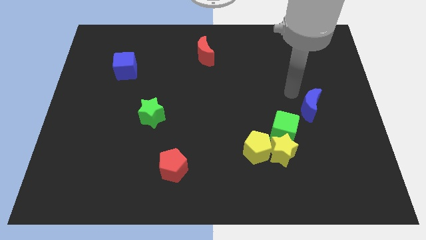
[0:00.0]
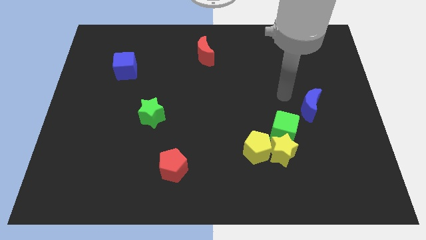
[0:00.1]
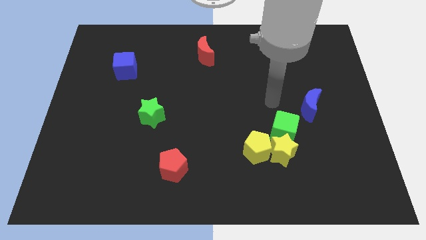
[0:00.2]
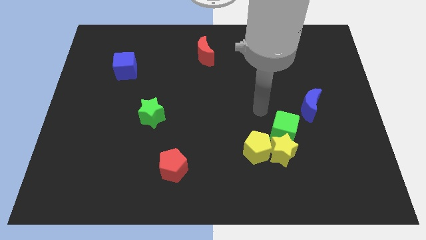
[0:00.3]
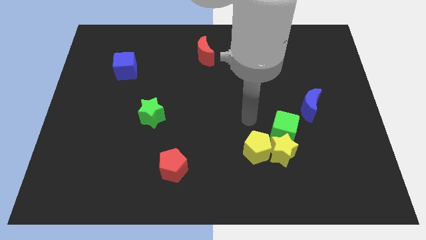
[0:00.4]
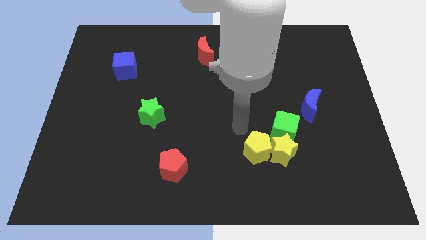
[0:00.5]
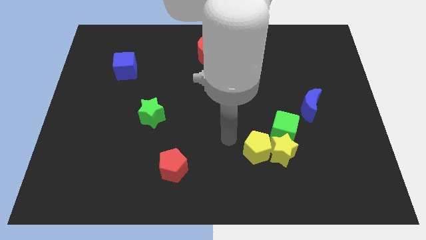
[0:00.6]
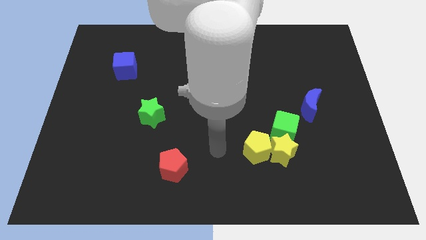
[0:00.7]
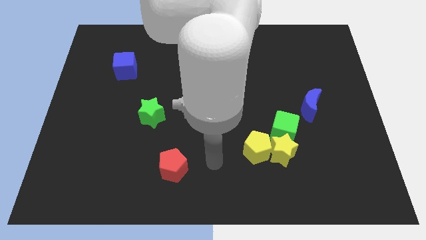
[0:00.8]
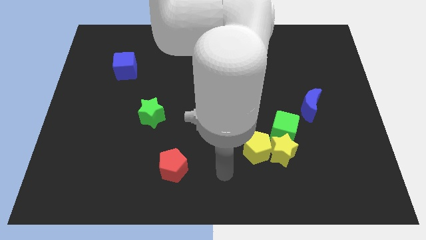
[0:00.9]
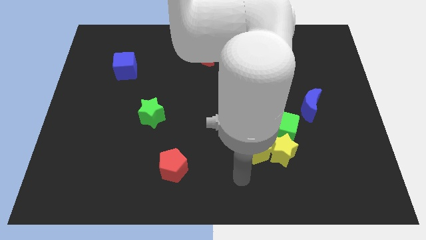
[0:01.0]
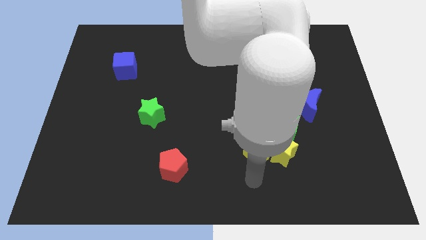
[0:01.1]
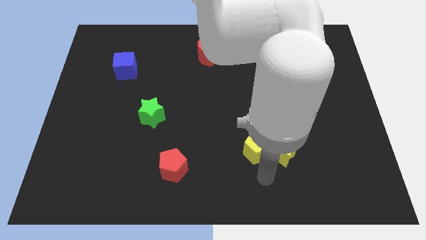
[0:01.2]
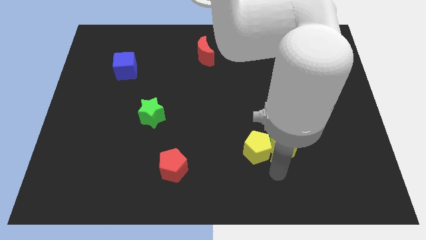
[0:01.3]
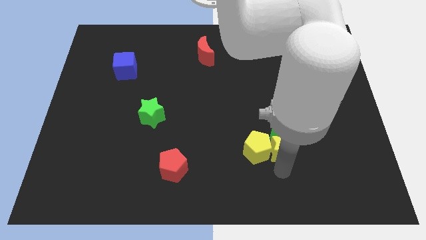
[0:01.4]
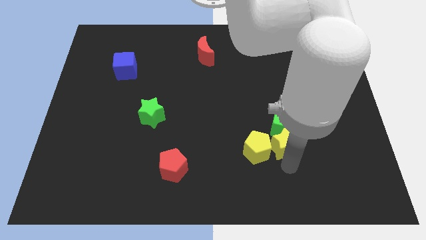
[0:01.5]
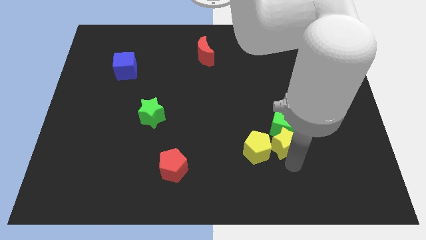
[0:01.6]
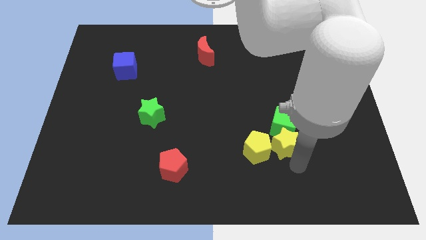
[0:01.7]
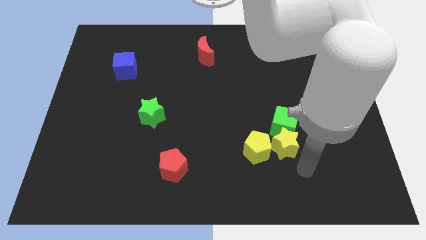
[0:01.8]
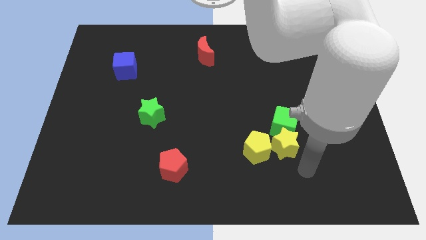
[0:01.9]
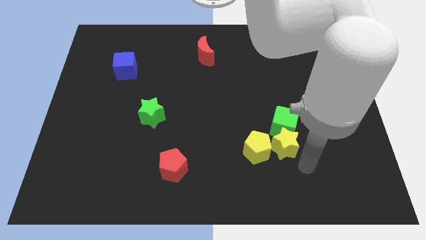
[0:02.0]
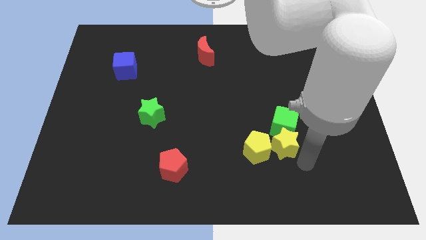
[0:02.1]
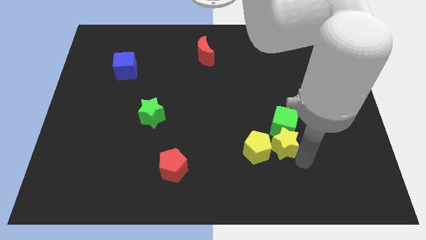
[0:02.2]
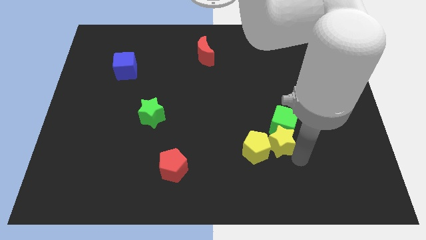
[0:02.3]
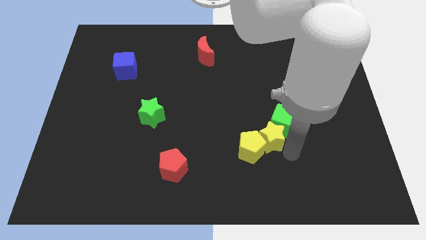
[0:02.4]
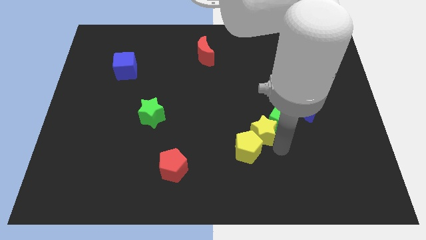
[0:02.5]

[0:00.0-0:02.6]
push the yellow star between the yellow pentagon and green cube

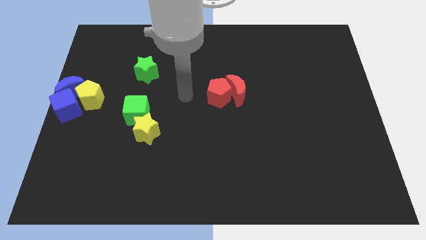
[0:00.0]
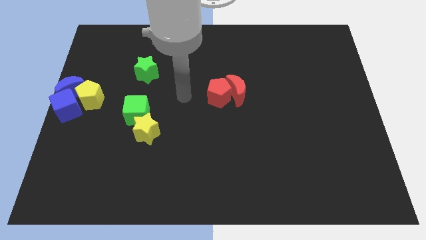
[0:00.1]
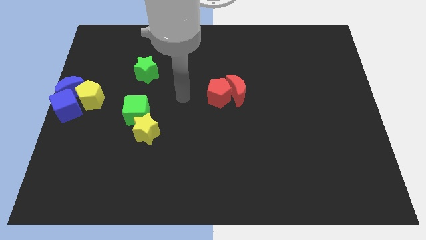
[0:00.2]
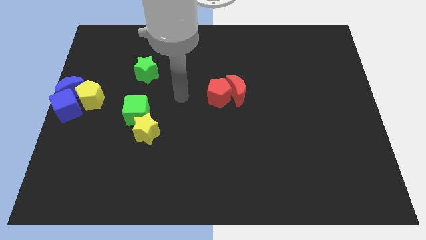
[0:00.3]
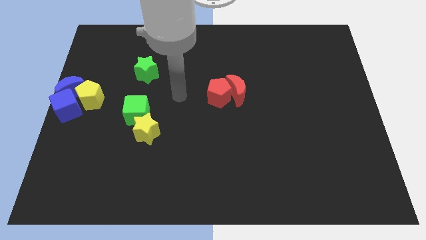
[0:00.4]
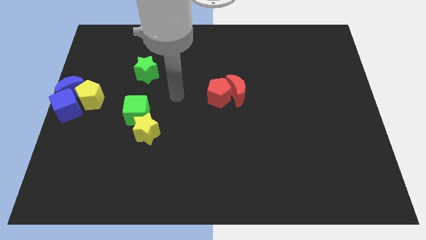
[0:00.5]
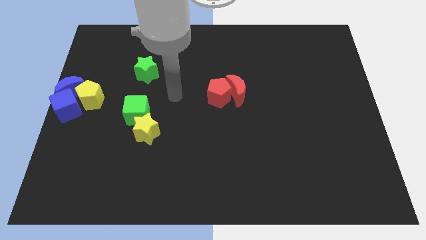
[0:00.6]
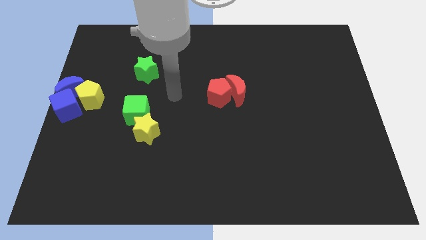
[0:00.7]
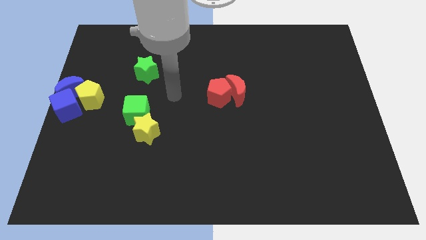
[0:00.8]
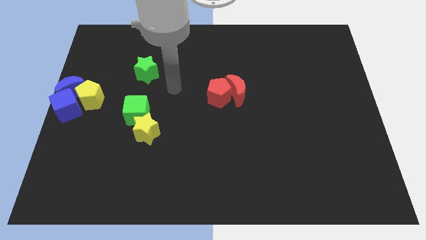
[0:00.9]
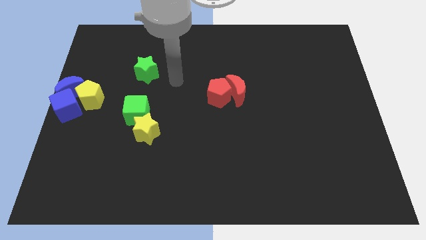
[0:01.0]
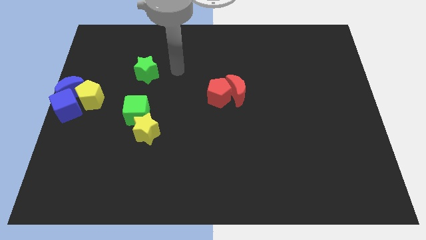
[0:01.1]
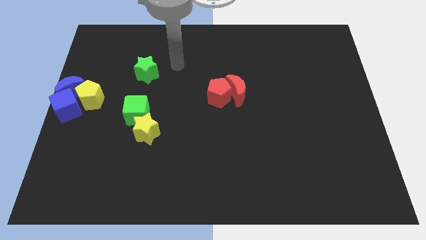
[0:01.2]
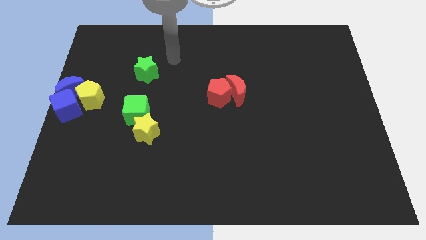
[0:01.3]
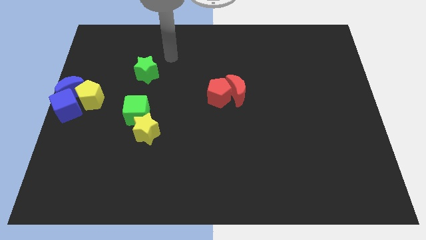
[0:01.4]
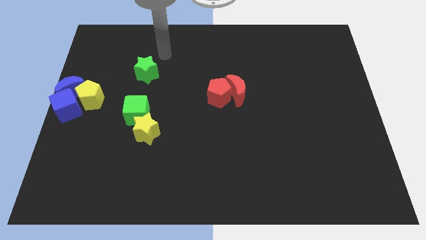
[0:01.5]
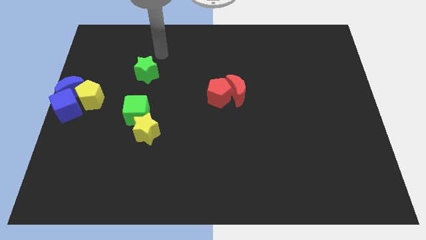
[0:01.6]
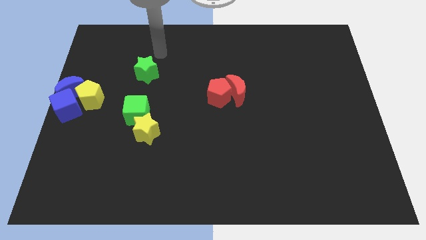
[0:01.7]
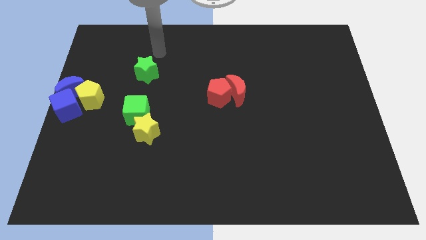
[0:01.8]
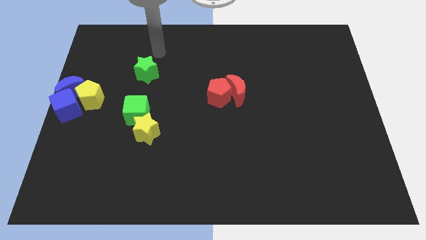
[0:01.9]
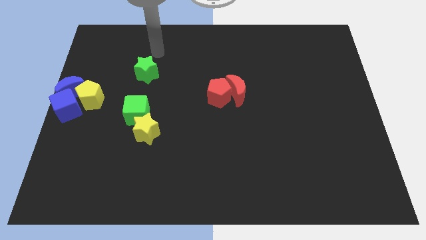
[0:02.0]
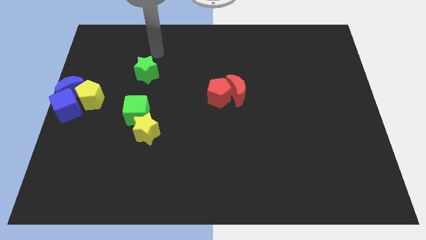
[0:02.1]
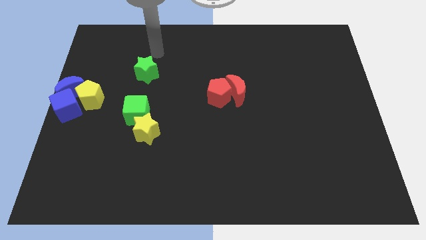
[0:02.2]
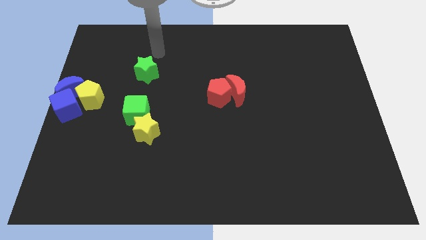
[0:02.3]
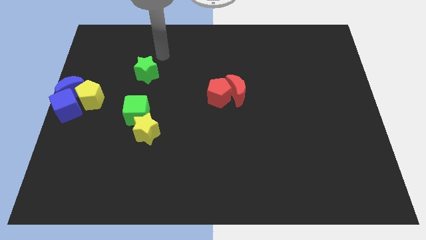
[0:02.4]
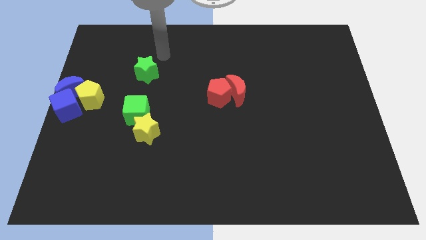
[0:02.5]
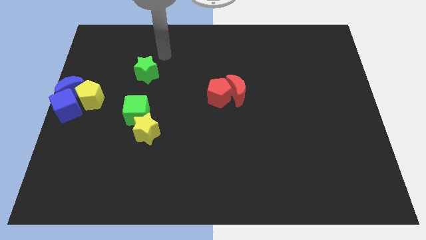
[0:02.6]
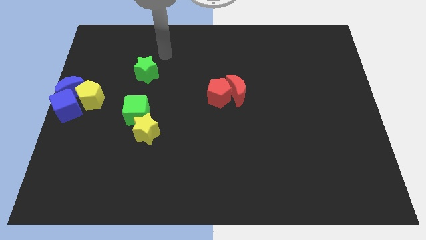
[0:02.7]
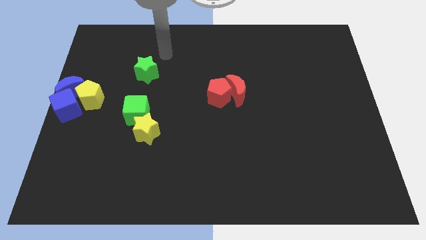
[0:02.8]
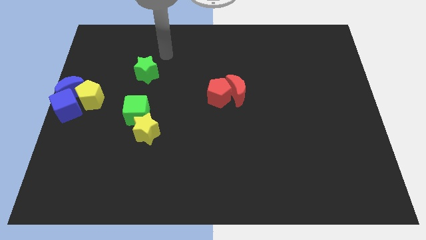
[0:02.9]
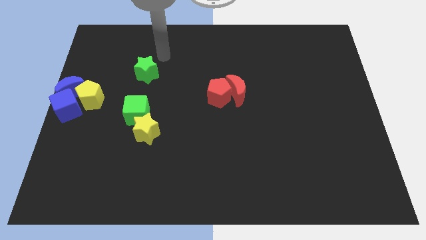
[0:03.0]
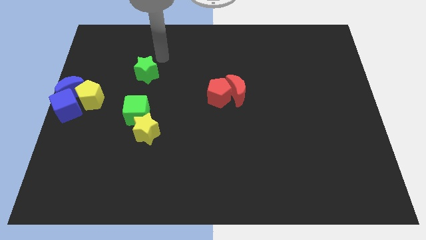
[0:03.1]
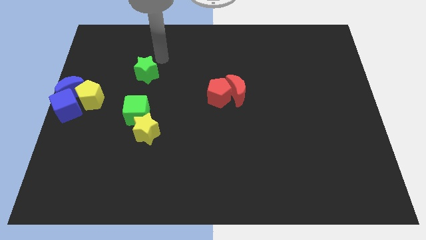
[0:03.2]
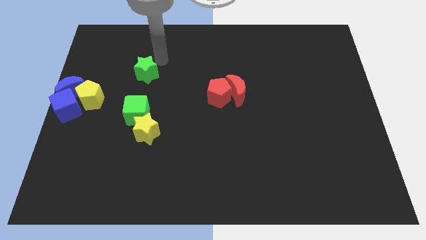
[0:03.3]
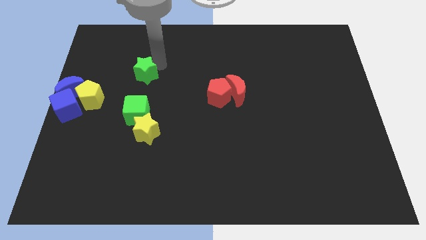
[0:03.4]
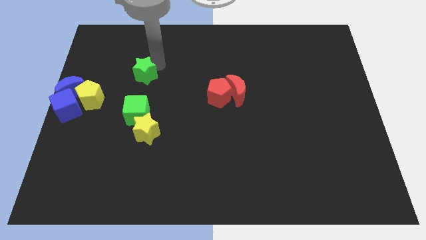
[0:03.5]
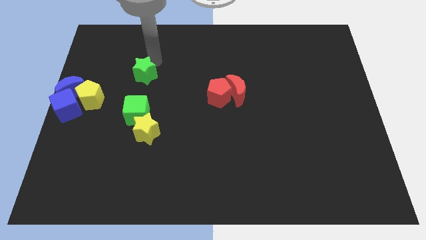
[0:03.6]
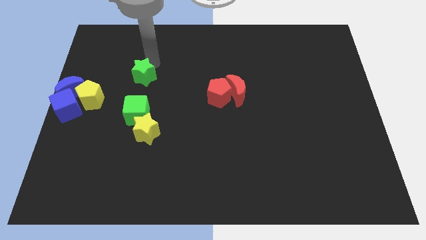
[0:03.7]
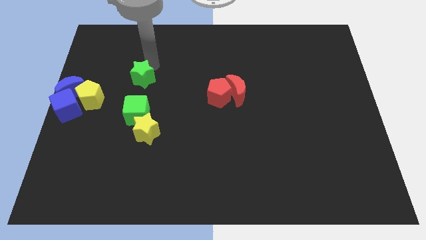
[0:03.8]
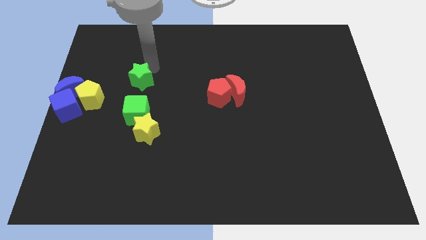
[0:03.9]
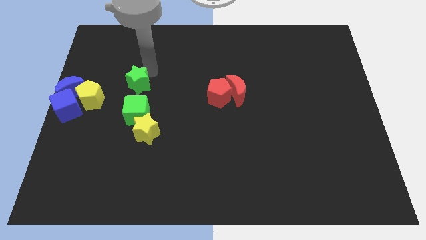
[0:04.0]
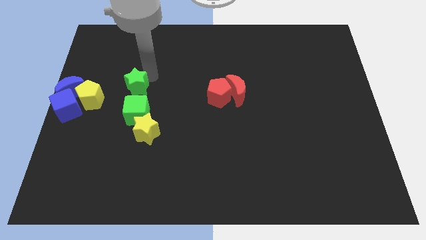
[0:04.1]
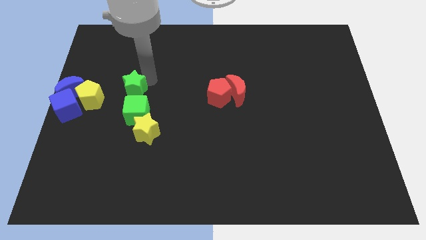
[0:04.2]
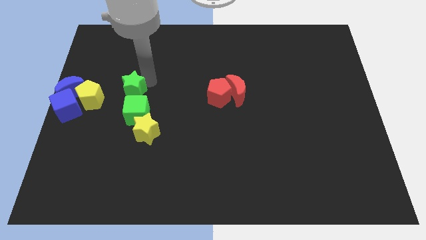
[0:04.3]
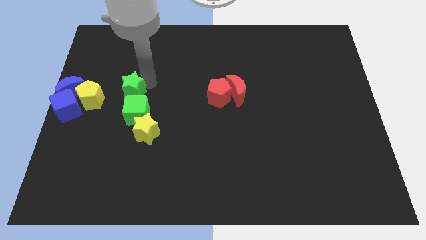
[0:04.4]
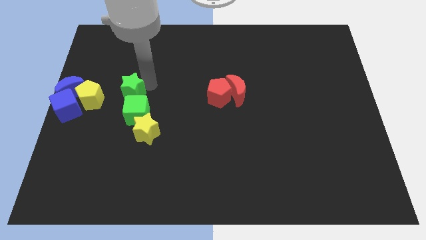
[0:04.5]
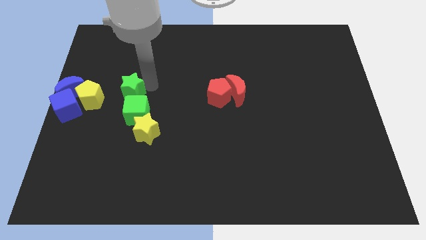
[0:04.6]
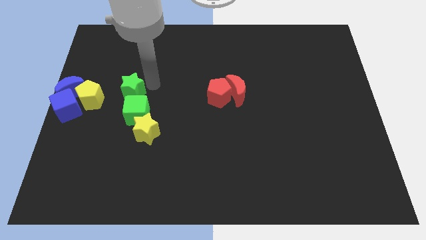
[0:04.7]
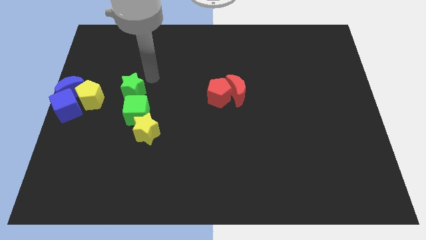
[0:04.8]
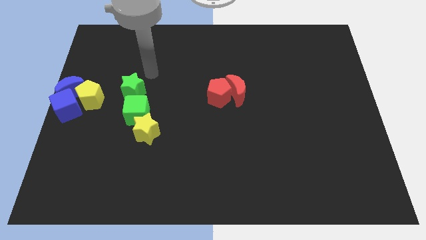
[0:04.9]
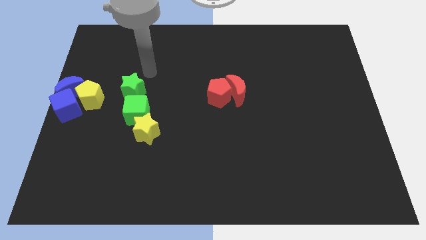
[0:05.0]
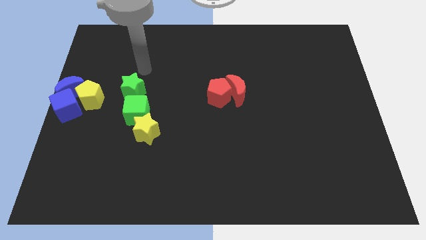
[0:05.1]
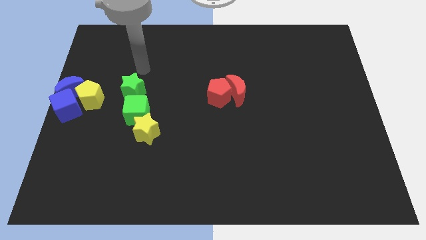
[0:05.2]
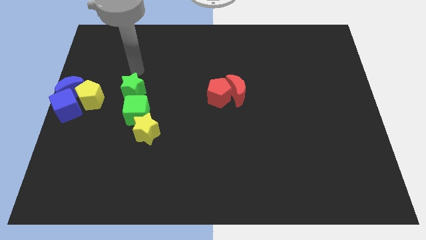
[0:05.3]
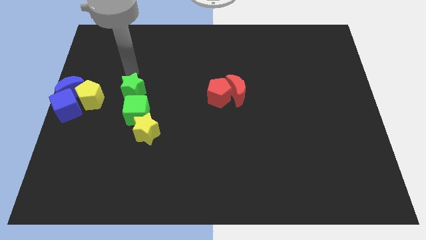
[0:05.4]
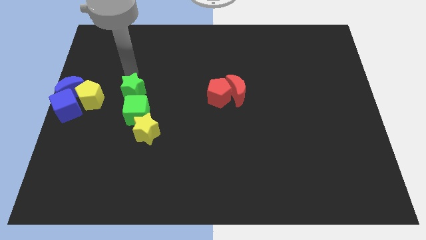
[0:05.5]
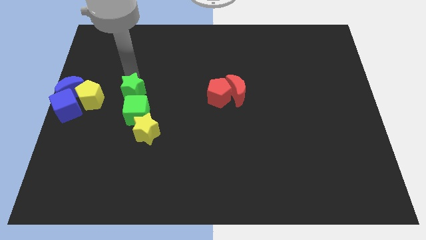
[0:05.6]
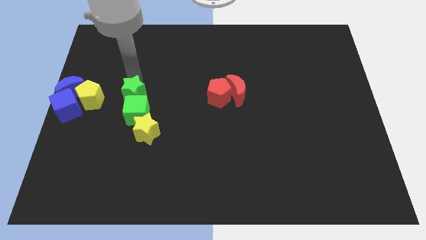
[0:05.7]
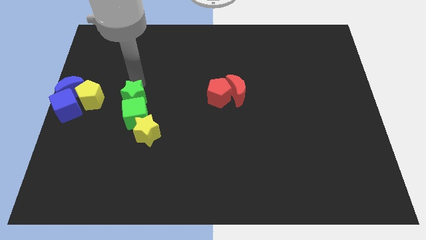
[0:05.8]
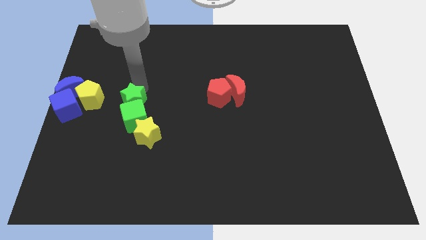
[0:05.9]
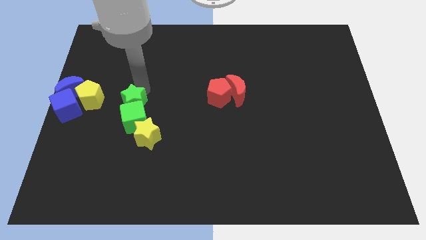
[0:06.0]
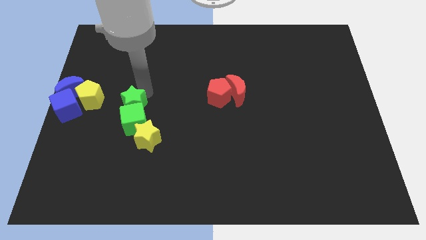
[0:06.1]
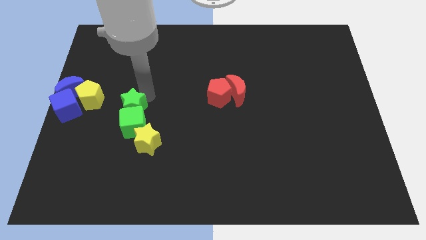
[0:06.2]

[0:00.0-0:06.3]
place the green star at the top of green cube
